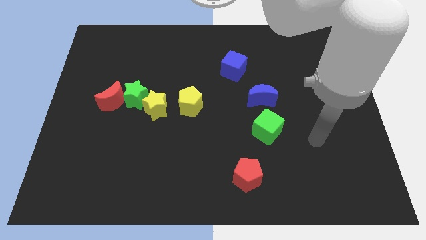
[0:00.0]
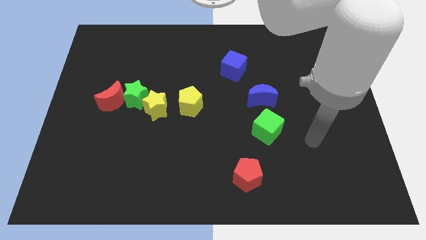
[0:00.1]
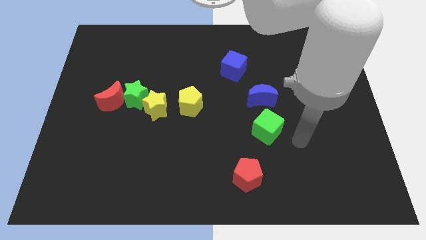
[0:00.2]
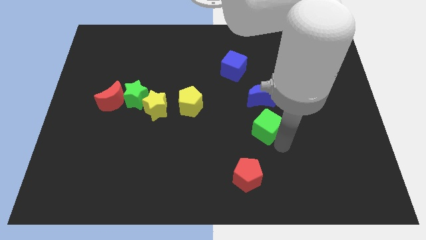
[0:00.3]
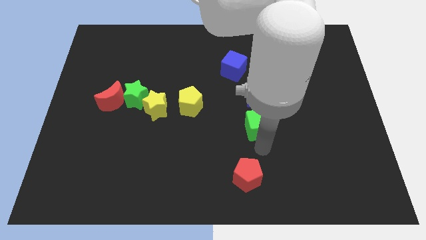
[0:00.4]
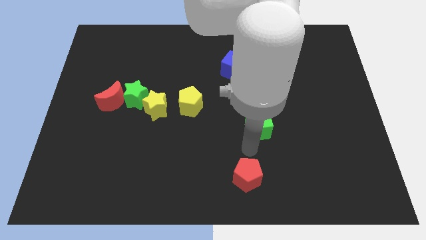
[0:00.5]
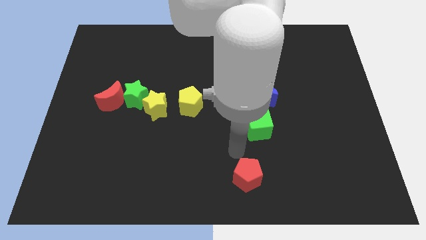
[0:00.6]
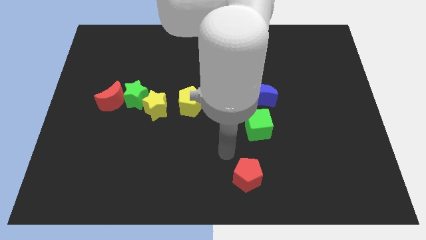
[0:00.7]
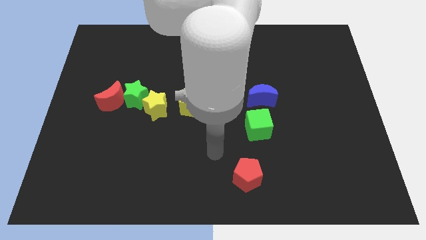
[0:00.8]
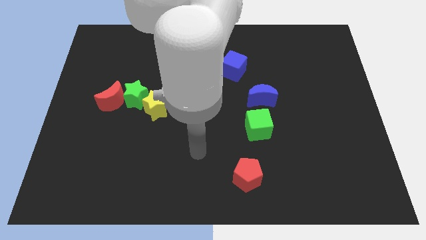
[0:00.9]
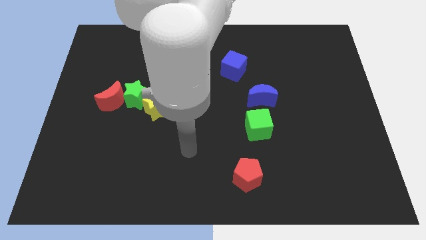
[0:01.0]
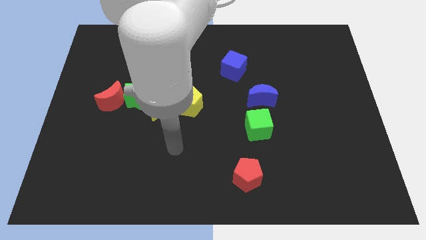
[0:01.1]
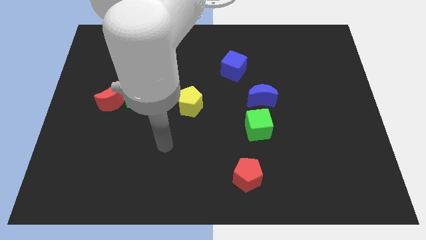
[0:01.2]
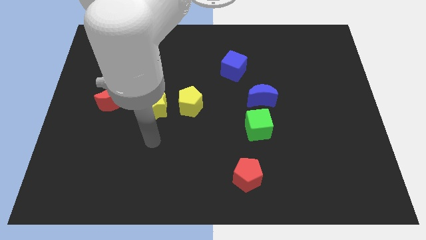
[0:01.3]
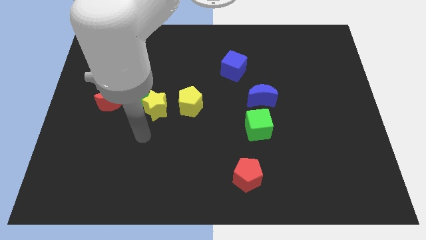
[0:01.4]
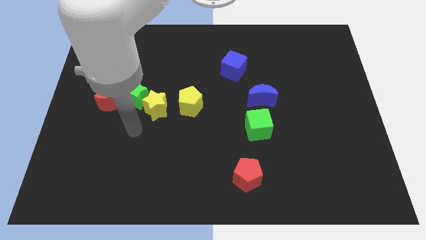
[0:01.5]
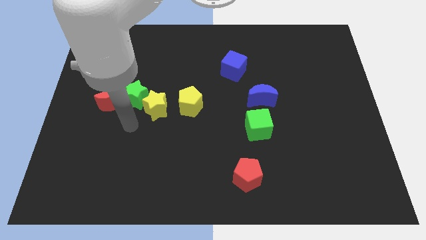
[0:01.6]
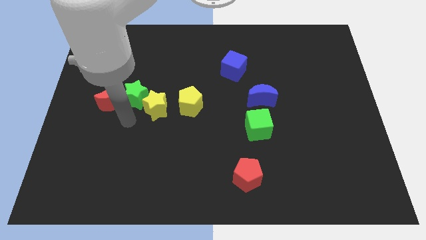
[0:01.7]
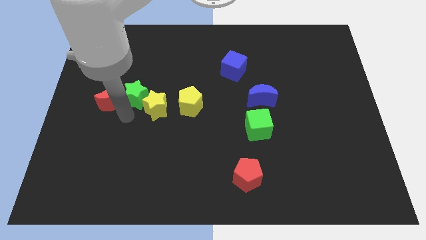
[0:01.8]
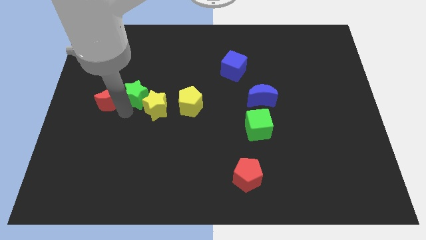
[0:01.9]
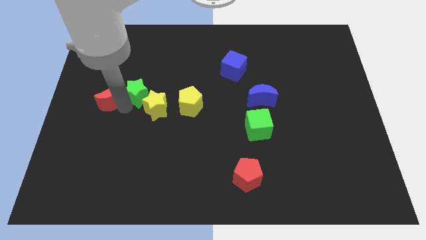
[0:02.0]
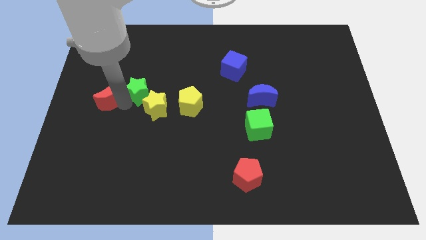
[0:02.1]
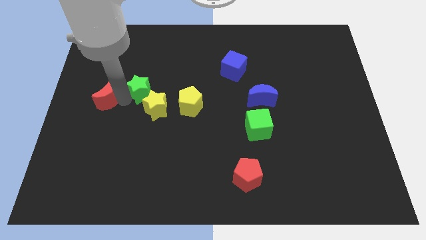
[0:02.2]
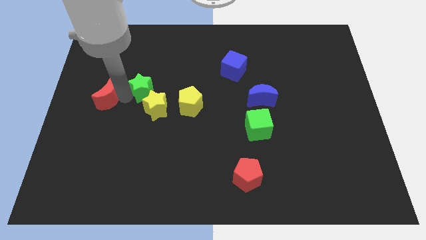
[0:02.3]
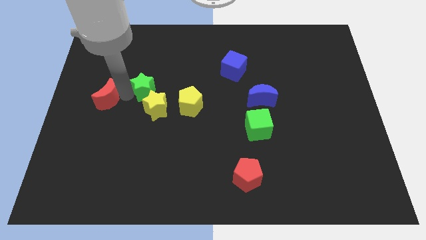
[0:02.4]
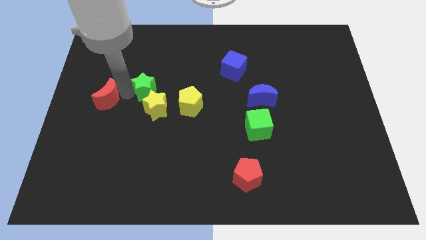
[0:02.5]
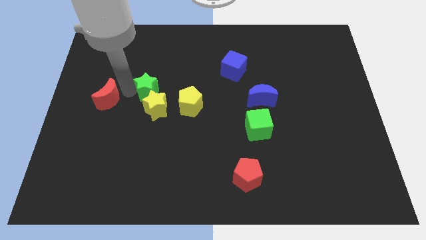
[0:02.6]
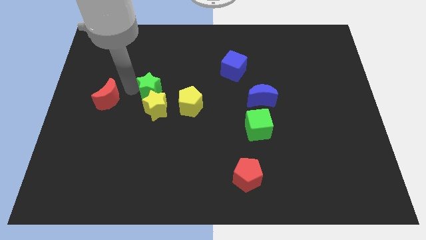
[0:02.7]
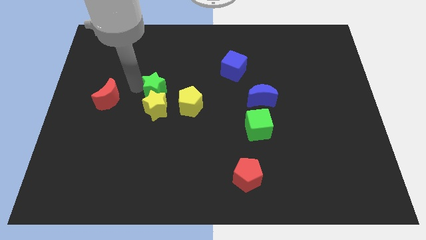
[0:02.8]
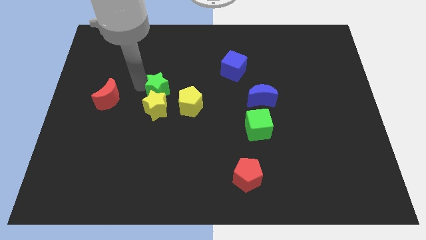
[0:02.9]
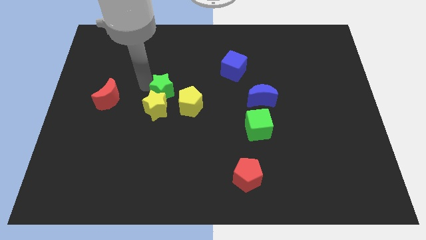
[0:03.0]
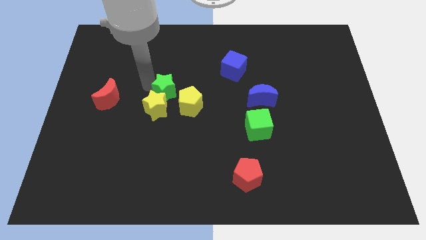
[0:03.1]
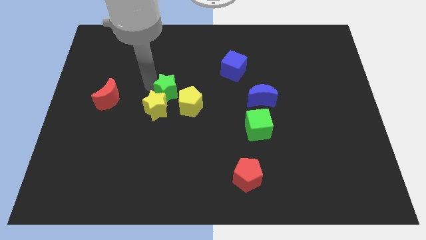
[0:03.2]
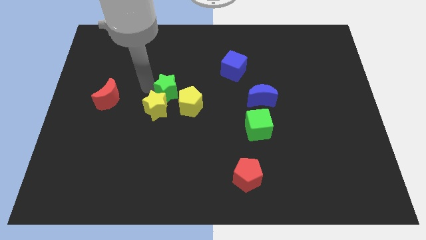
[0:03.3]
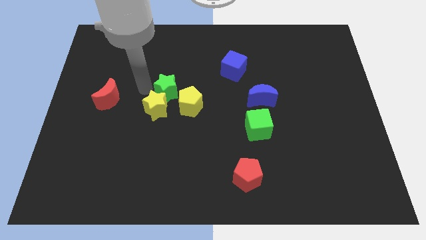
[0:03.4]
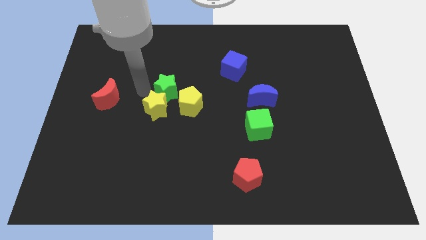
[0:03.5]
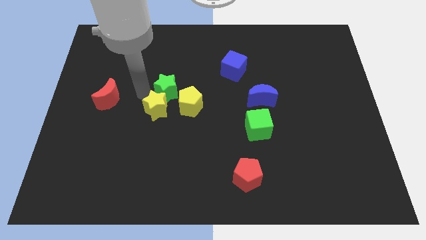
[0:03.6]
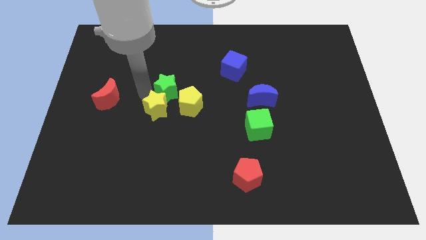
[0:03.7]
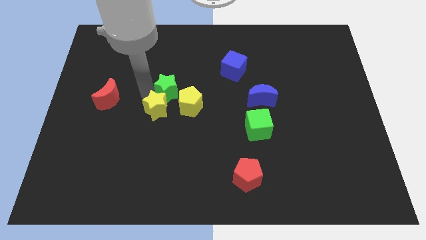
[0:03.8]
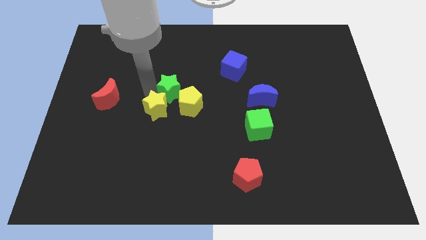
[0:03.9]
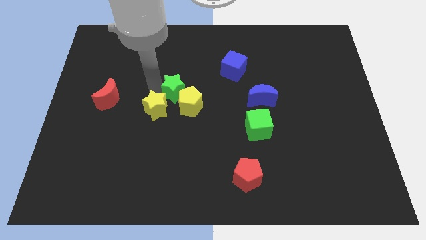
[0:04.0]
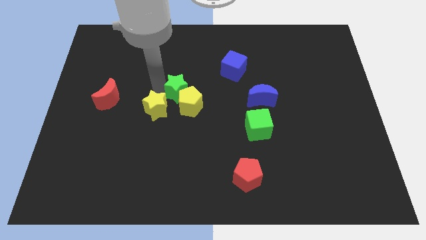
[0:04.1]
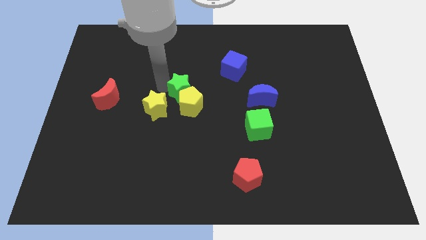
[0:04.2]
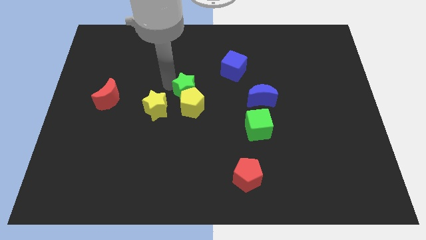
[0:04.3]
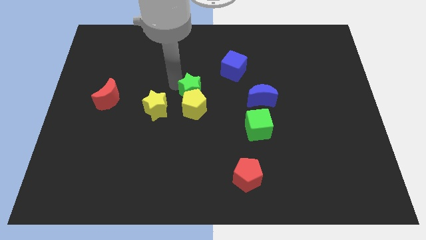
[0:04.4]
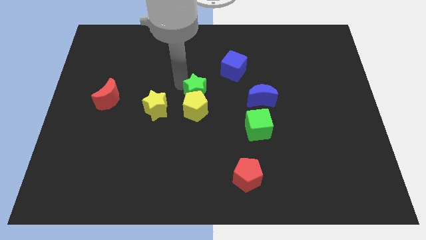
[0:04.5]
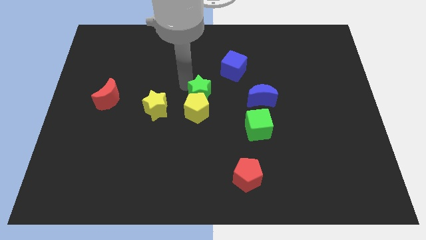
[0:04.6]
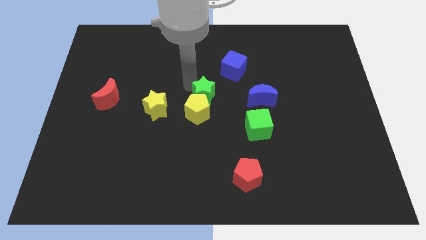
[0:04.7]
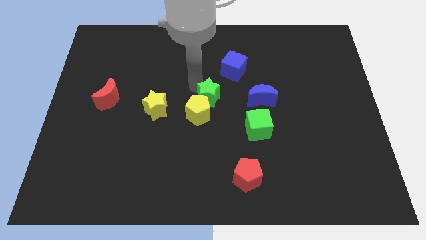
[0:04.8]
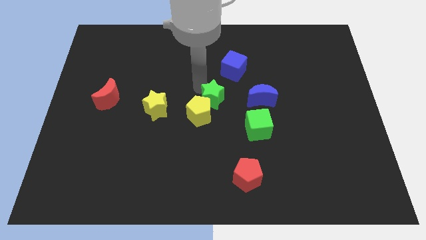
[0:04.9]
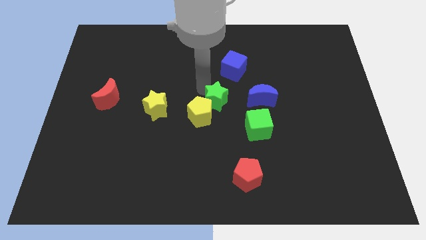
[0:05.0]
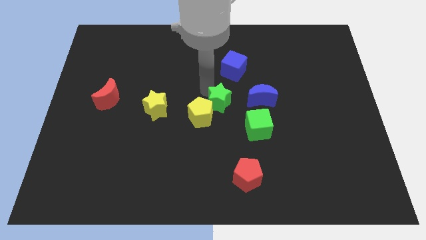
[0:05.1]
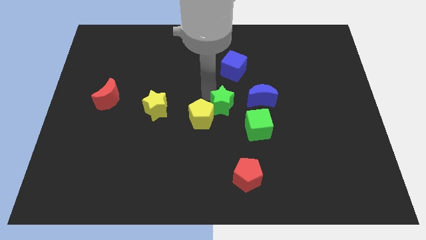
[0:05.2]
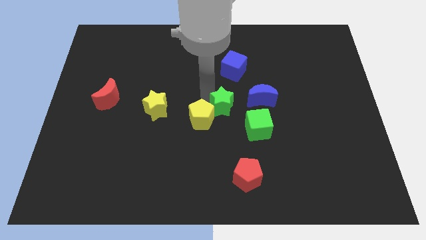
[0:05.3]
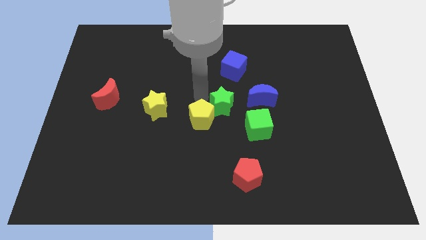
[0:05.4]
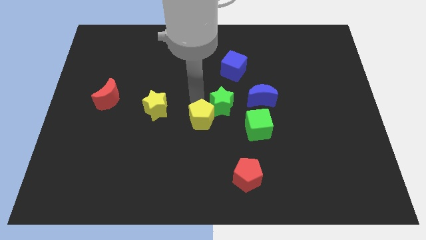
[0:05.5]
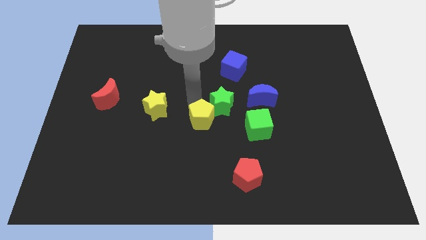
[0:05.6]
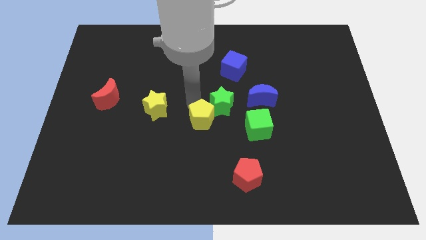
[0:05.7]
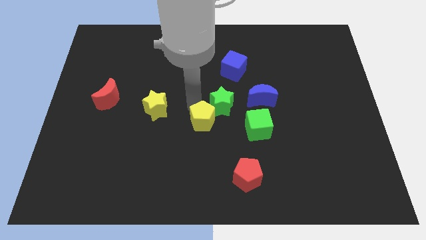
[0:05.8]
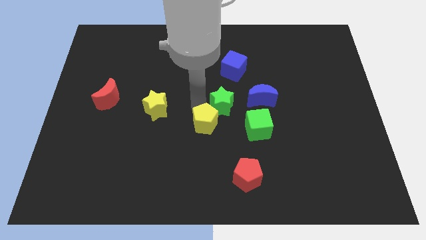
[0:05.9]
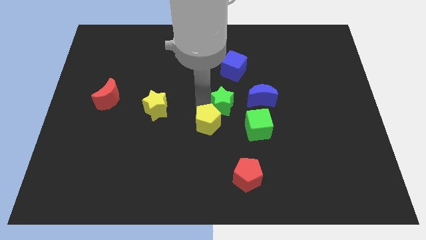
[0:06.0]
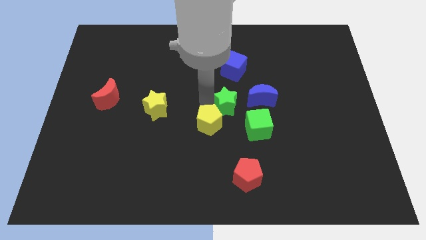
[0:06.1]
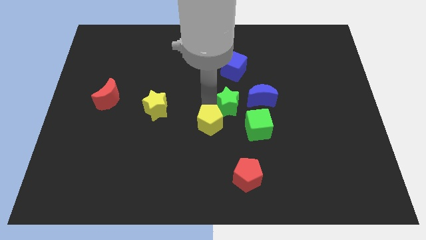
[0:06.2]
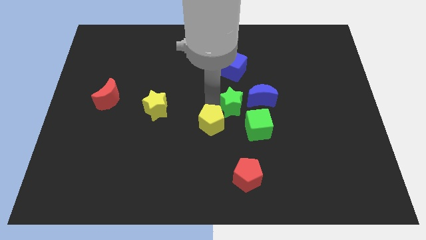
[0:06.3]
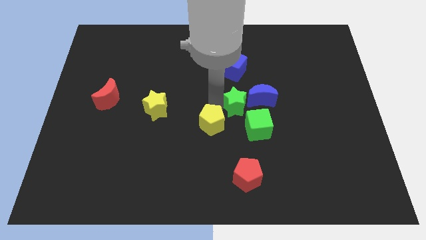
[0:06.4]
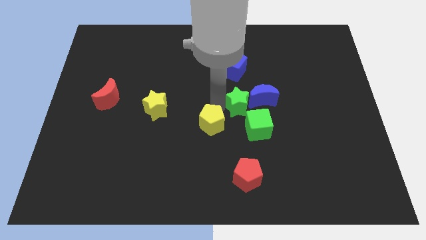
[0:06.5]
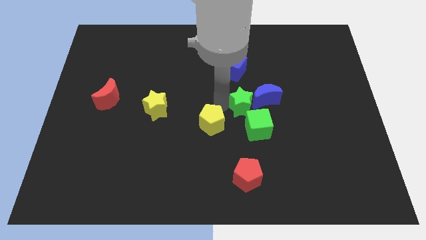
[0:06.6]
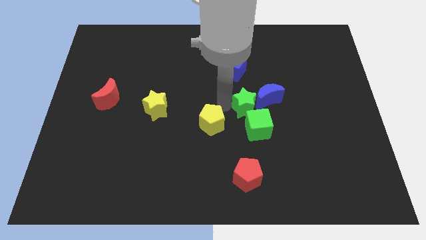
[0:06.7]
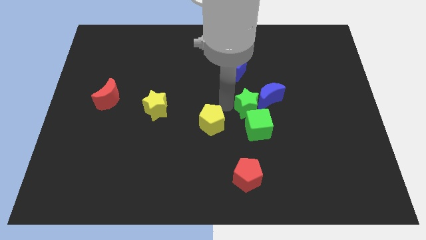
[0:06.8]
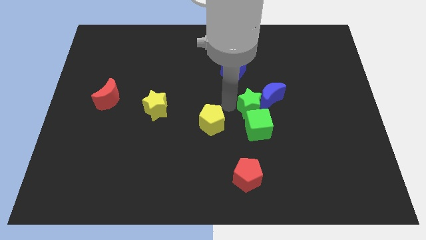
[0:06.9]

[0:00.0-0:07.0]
move the green star towards the blue moon

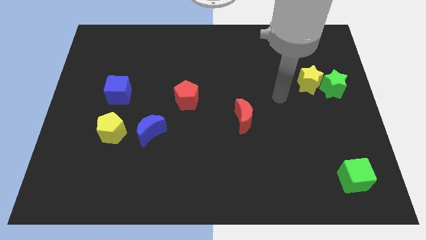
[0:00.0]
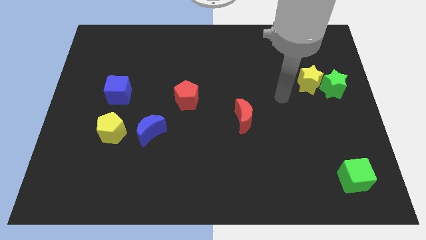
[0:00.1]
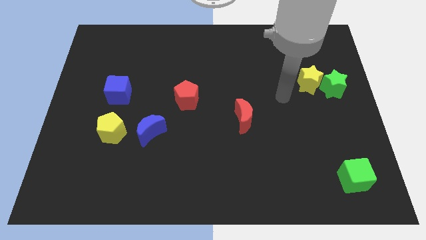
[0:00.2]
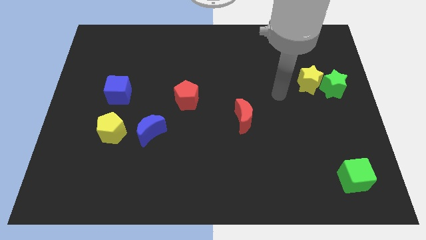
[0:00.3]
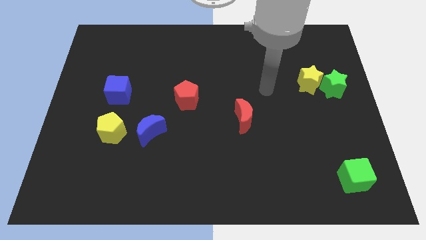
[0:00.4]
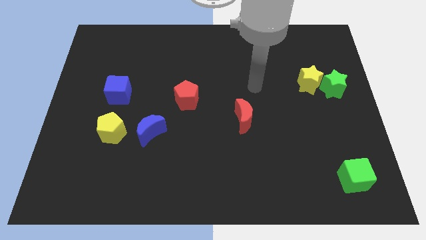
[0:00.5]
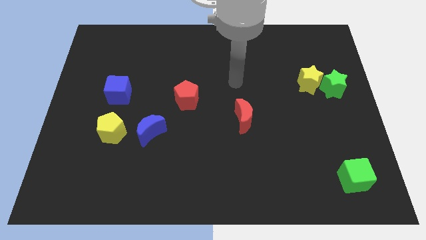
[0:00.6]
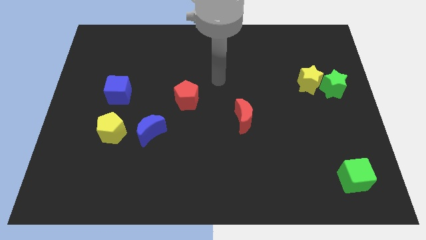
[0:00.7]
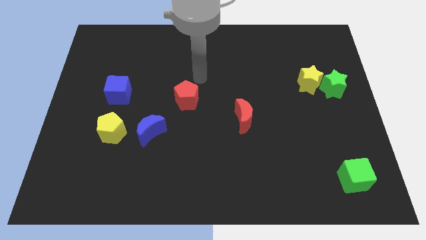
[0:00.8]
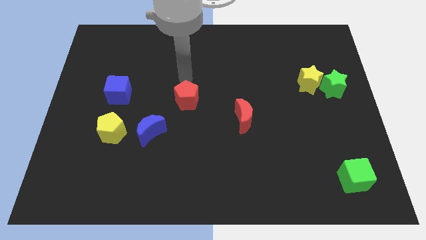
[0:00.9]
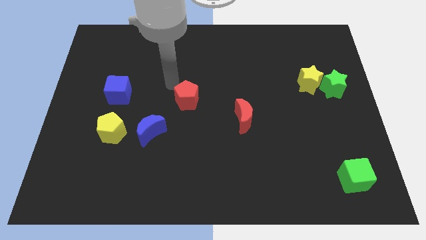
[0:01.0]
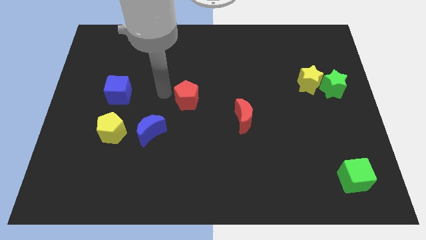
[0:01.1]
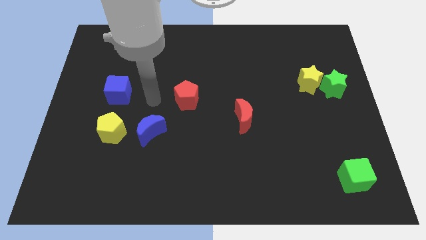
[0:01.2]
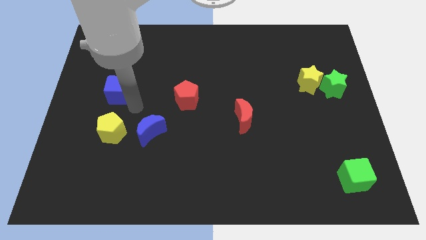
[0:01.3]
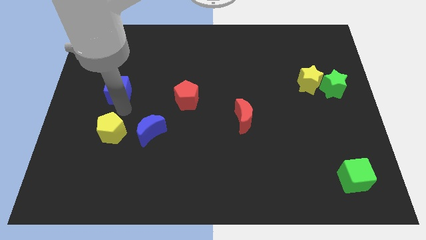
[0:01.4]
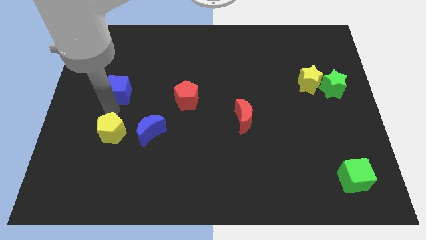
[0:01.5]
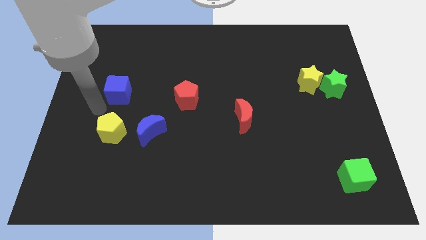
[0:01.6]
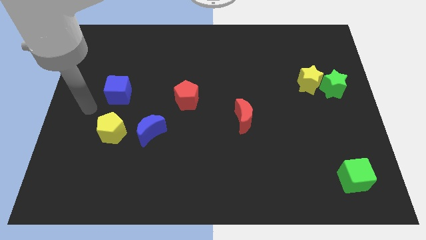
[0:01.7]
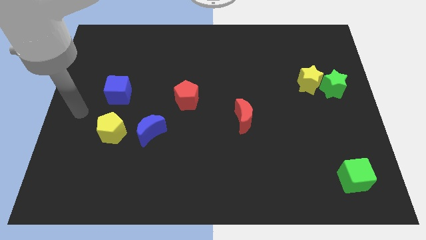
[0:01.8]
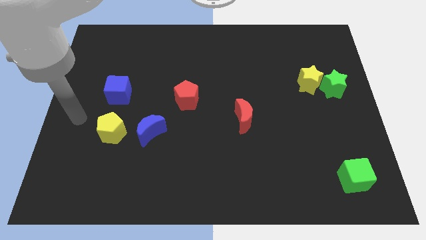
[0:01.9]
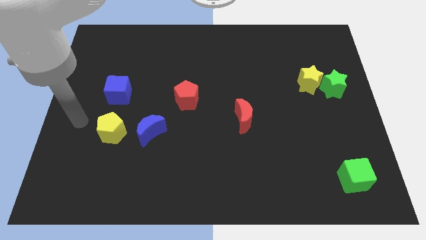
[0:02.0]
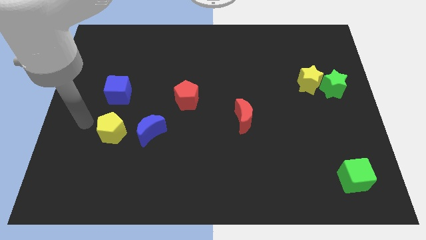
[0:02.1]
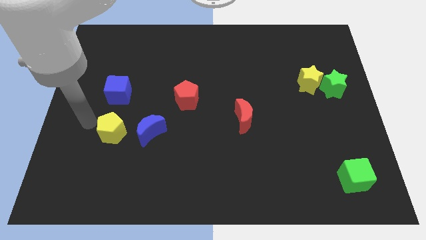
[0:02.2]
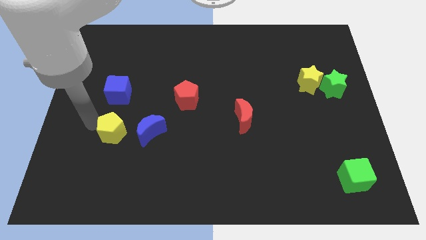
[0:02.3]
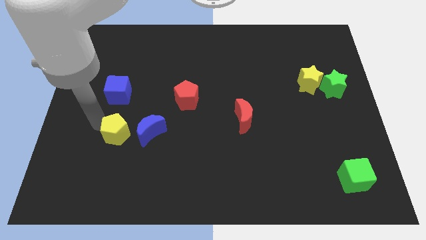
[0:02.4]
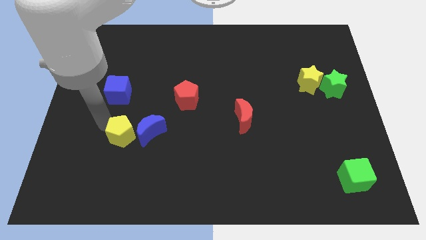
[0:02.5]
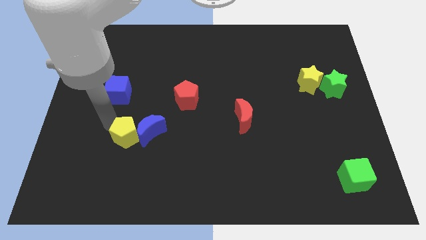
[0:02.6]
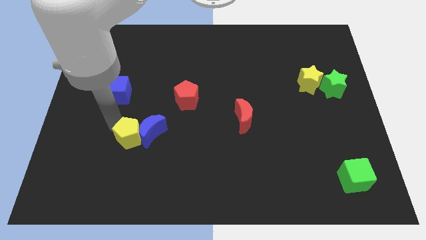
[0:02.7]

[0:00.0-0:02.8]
push the yellow pentagon to the blue moon
